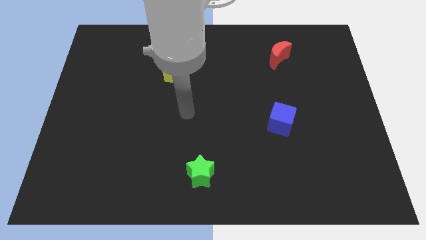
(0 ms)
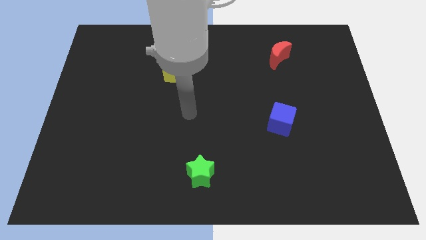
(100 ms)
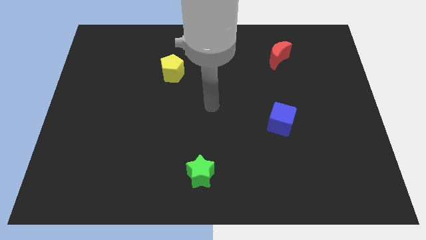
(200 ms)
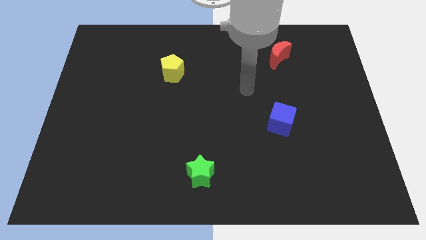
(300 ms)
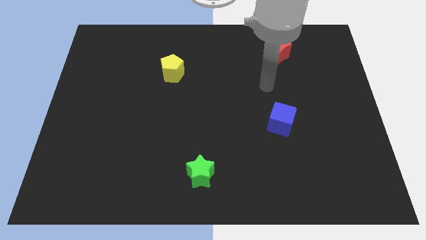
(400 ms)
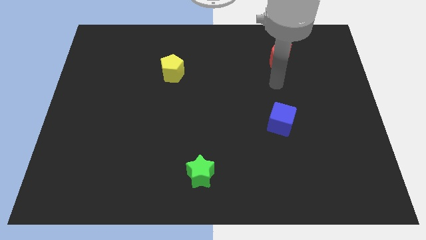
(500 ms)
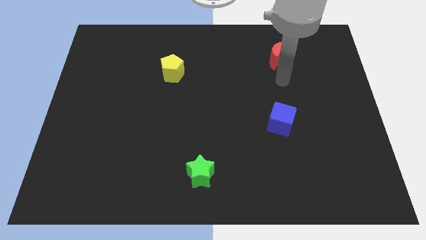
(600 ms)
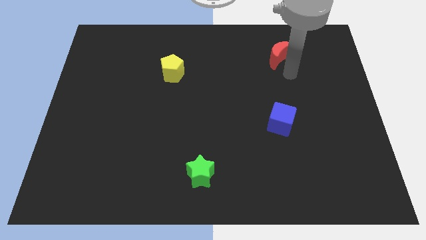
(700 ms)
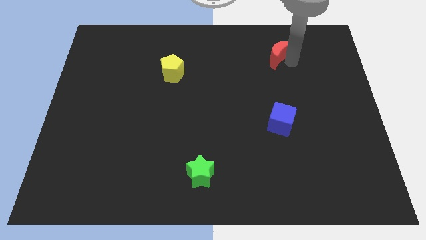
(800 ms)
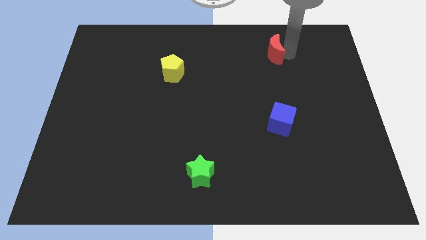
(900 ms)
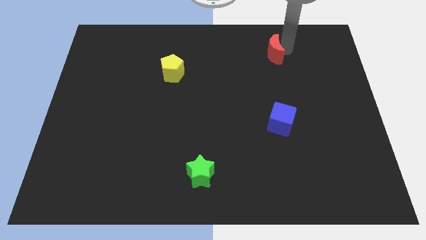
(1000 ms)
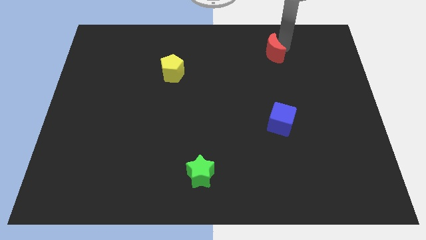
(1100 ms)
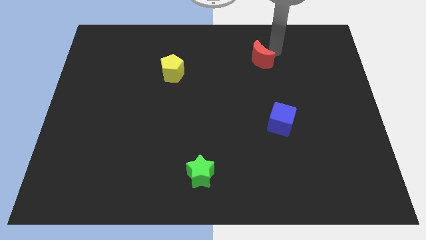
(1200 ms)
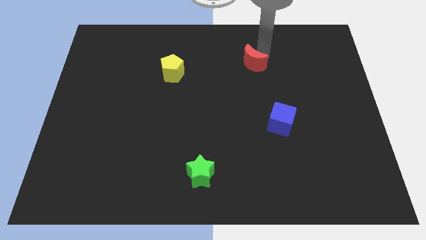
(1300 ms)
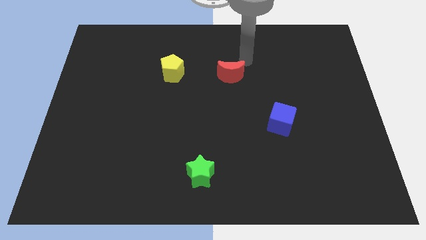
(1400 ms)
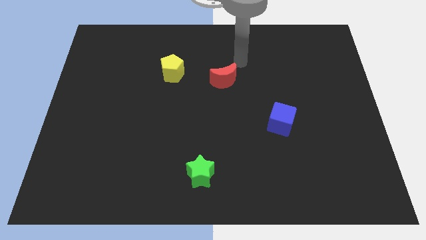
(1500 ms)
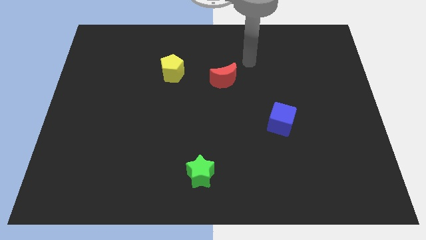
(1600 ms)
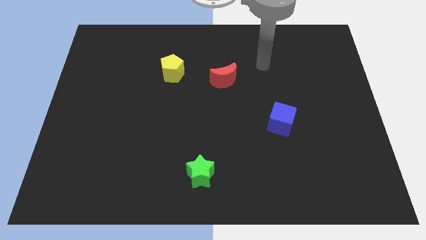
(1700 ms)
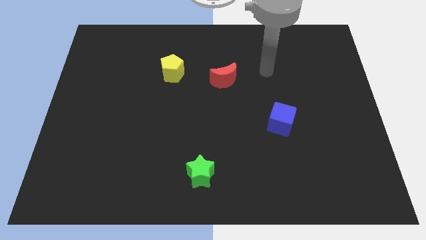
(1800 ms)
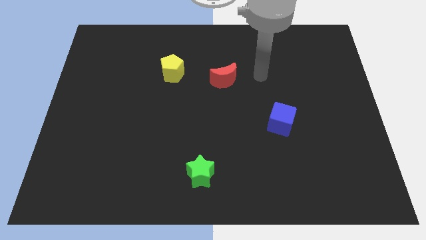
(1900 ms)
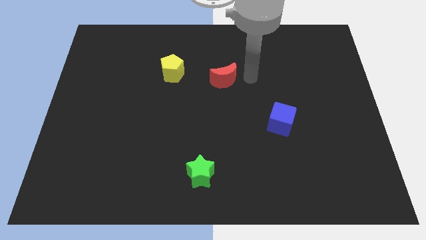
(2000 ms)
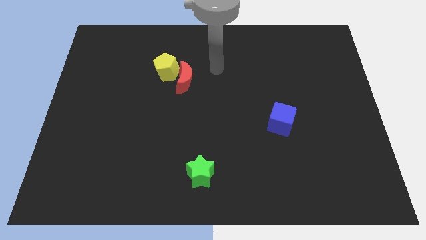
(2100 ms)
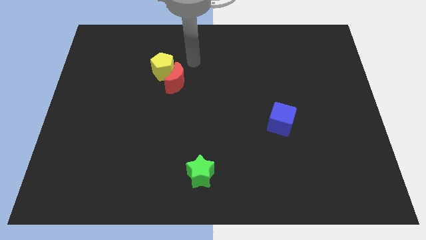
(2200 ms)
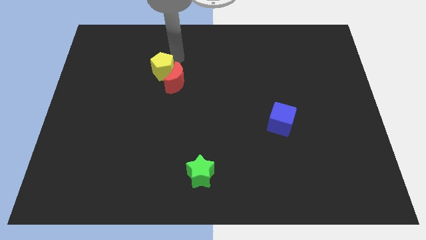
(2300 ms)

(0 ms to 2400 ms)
put the red moon towards the pentagon

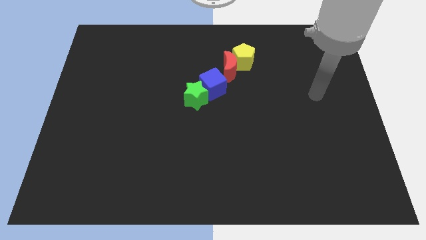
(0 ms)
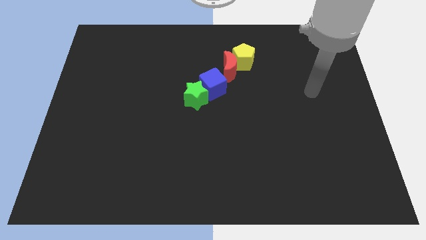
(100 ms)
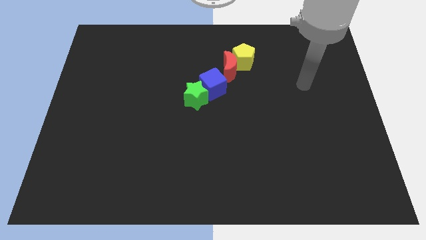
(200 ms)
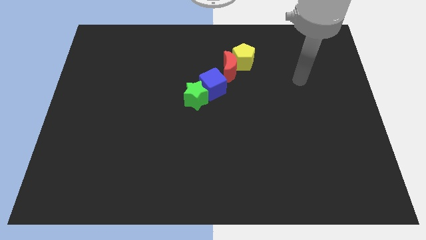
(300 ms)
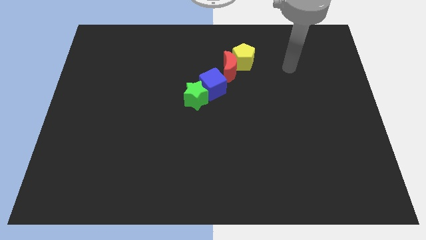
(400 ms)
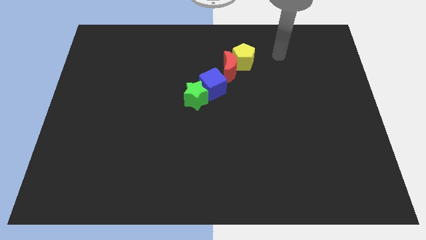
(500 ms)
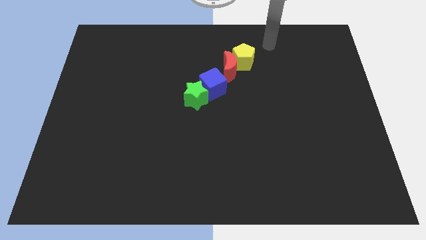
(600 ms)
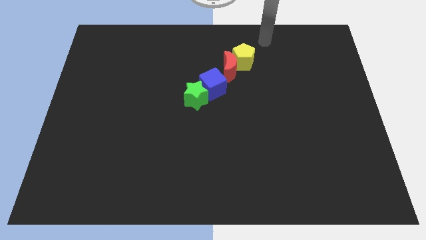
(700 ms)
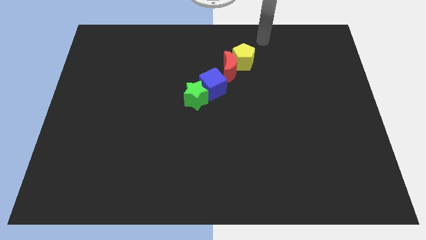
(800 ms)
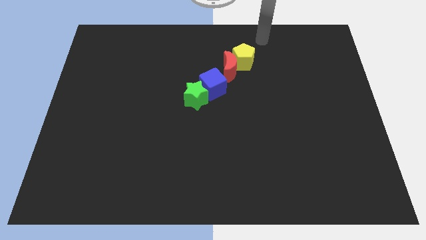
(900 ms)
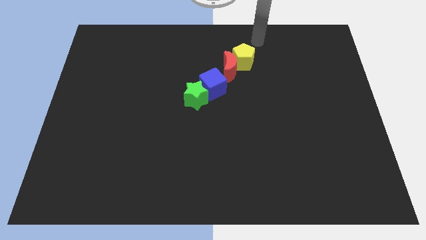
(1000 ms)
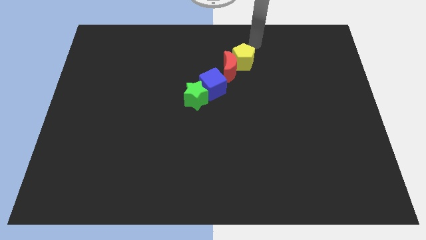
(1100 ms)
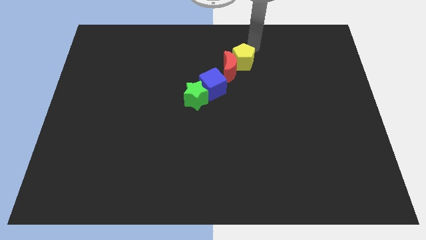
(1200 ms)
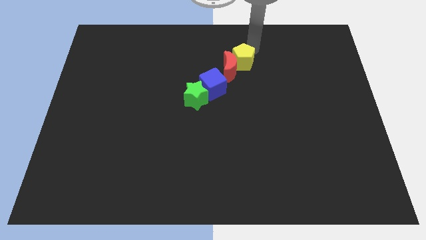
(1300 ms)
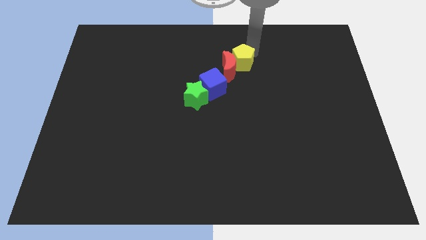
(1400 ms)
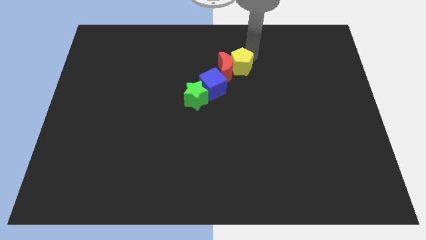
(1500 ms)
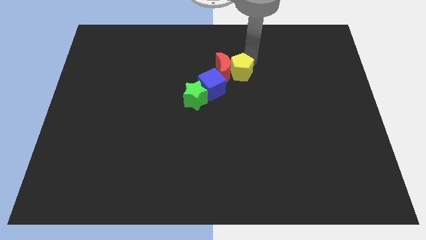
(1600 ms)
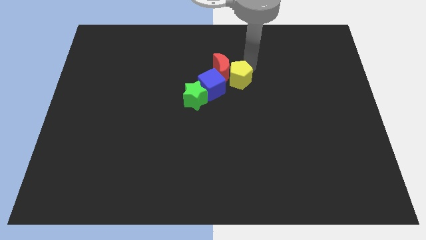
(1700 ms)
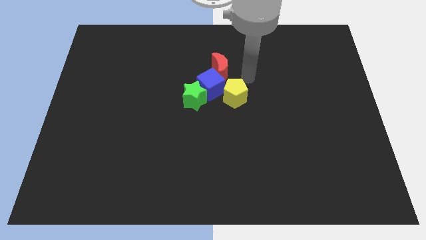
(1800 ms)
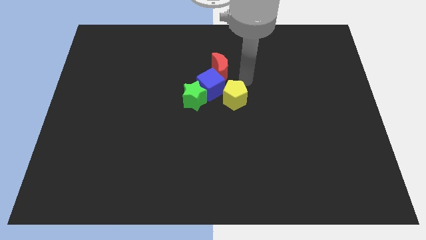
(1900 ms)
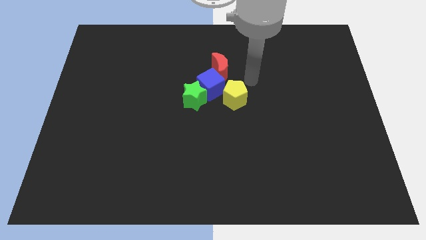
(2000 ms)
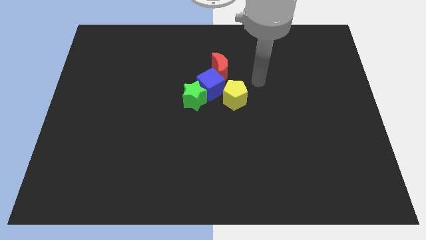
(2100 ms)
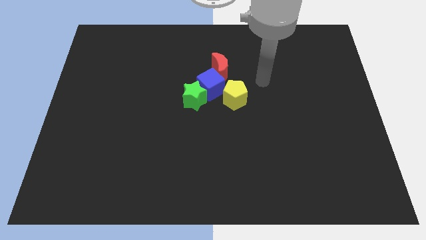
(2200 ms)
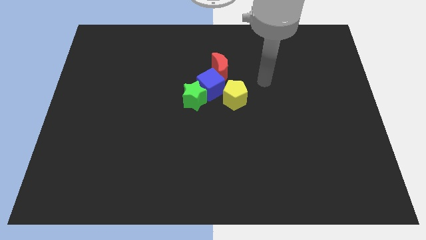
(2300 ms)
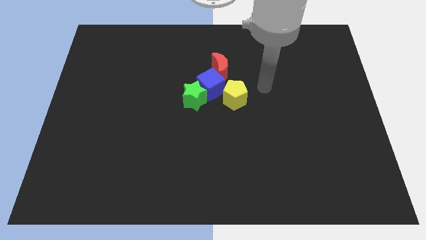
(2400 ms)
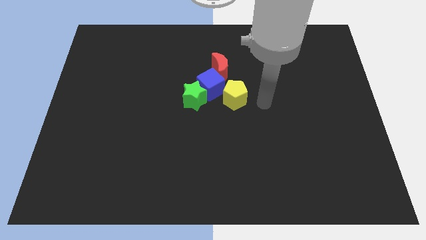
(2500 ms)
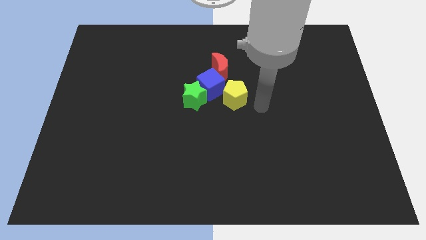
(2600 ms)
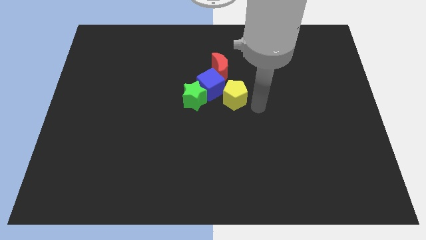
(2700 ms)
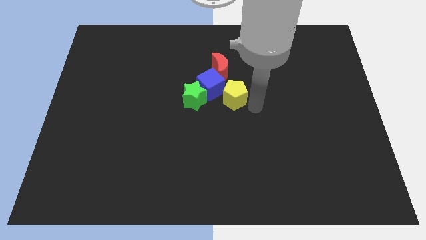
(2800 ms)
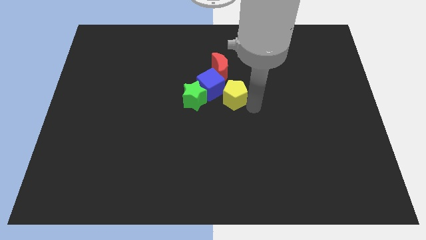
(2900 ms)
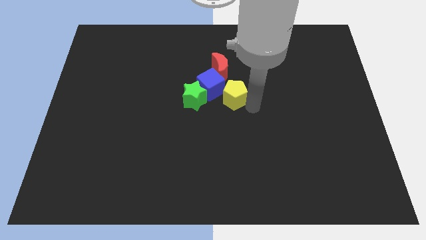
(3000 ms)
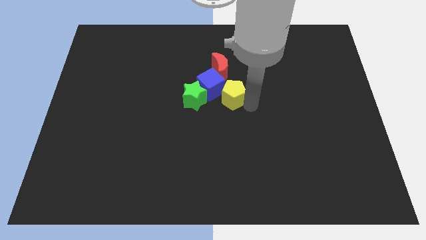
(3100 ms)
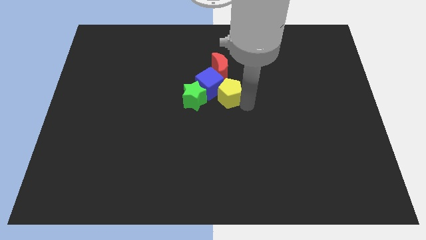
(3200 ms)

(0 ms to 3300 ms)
put the yellow block close to the blue block

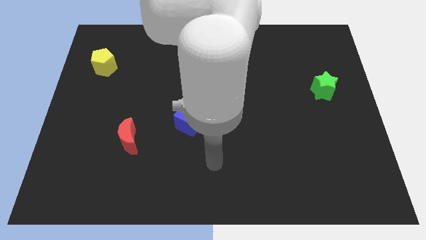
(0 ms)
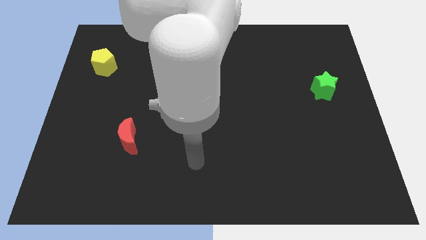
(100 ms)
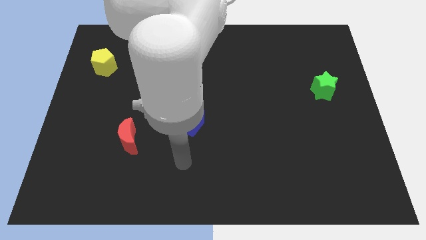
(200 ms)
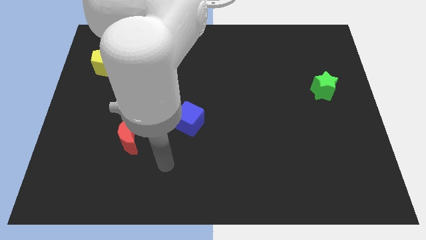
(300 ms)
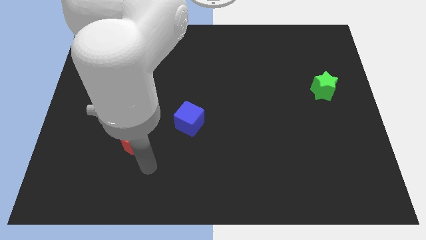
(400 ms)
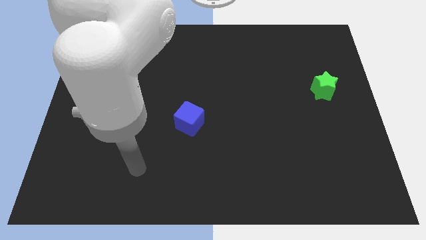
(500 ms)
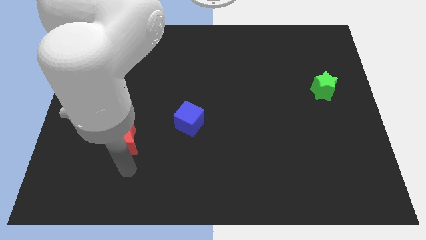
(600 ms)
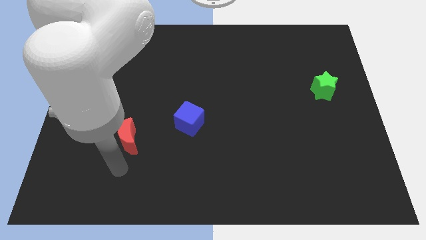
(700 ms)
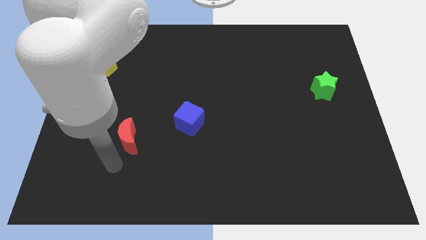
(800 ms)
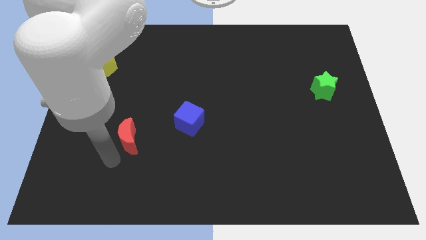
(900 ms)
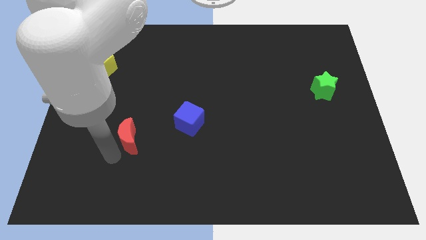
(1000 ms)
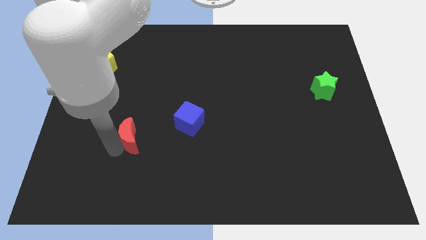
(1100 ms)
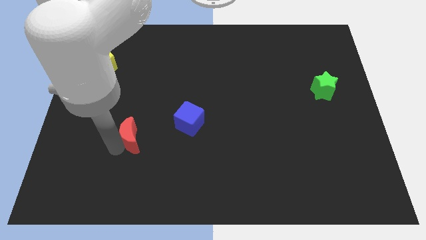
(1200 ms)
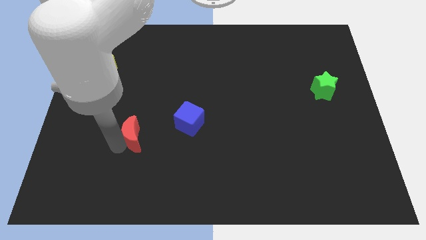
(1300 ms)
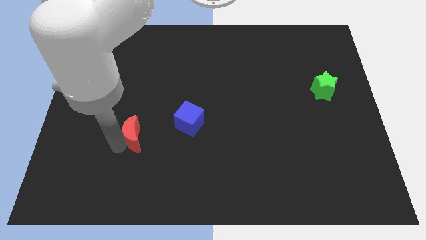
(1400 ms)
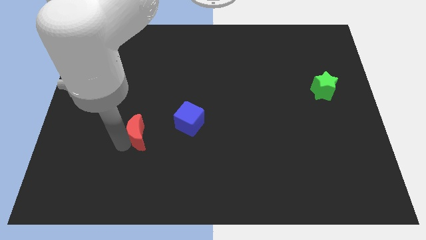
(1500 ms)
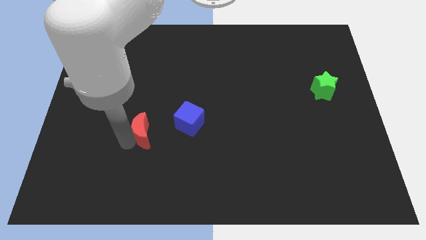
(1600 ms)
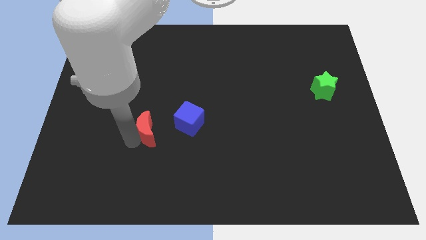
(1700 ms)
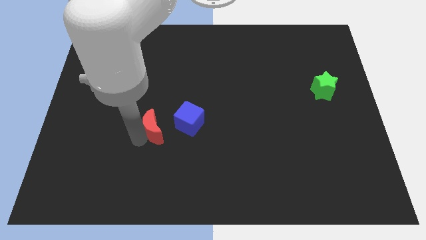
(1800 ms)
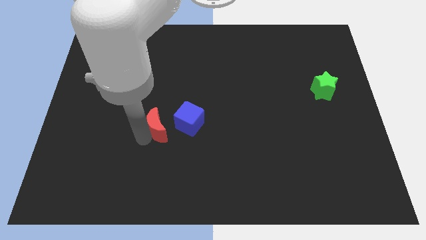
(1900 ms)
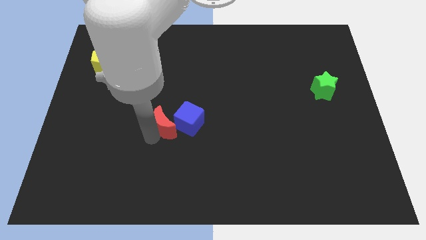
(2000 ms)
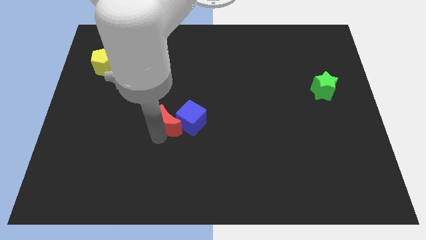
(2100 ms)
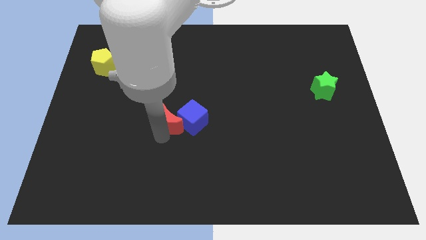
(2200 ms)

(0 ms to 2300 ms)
put the moon close to the cube

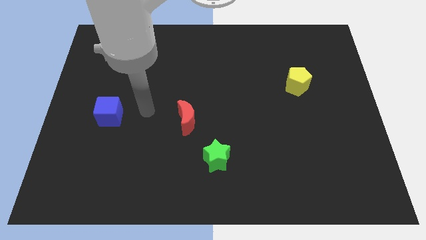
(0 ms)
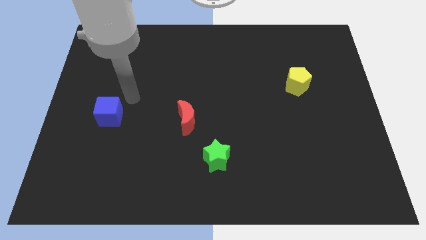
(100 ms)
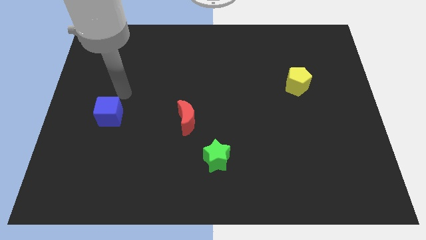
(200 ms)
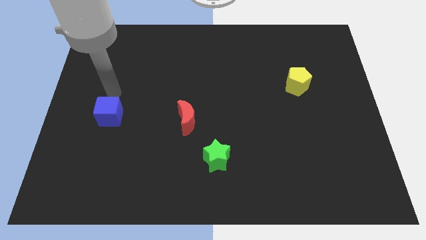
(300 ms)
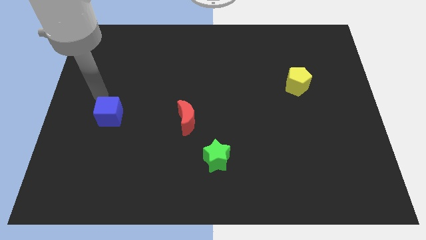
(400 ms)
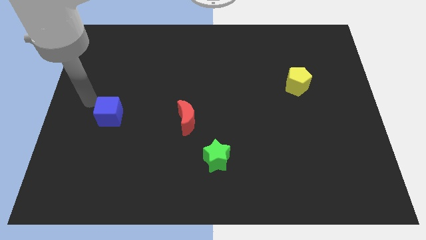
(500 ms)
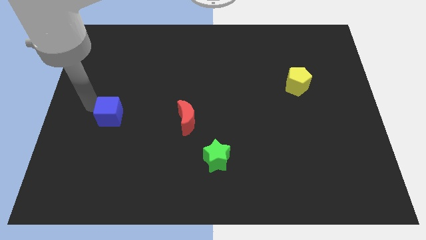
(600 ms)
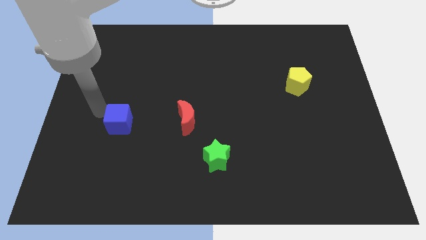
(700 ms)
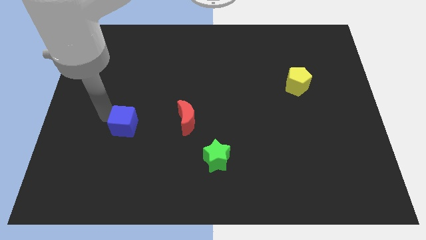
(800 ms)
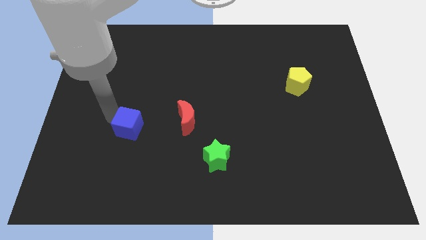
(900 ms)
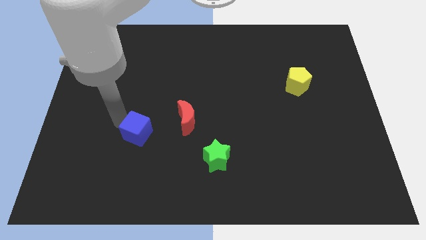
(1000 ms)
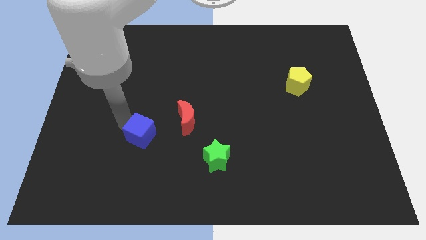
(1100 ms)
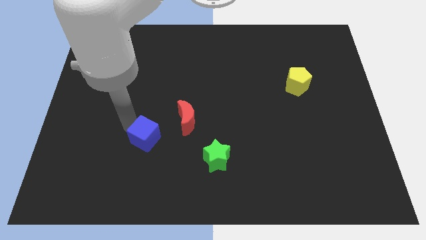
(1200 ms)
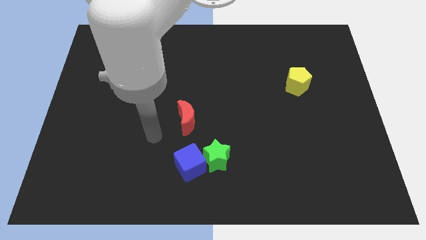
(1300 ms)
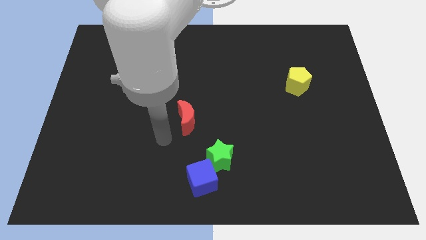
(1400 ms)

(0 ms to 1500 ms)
put the cube close to the green star
